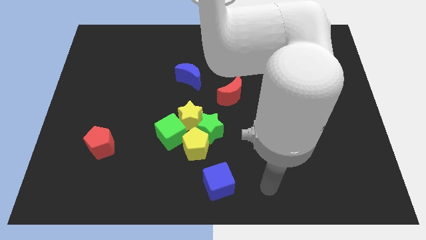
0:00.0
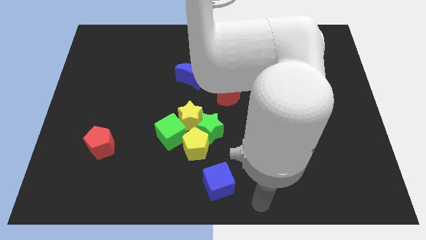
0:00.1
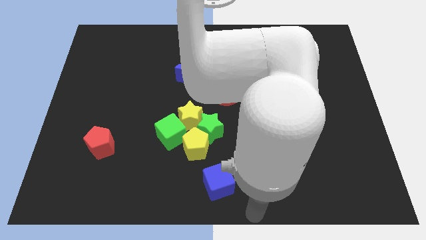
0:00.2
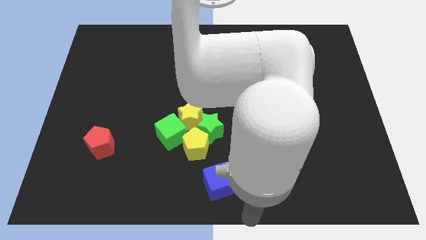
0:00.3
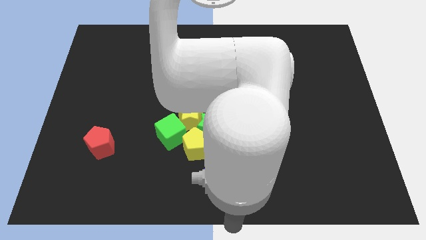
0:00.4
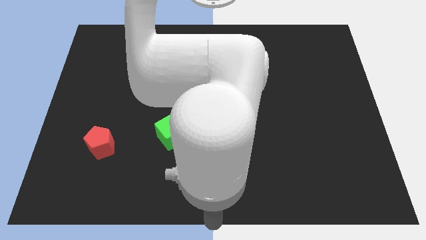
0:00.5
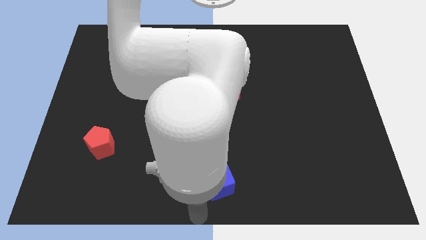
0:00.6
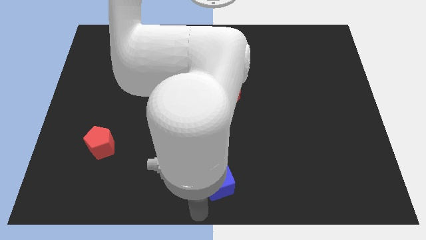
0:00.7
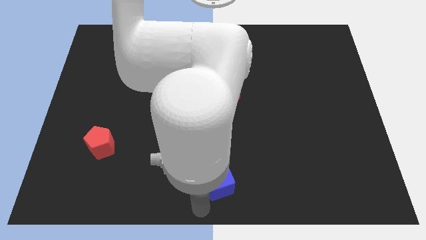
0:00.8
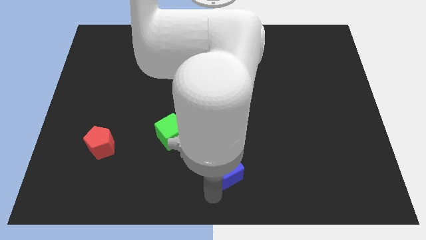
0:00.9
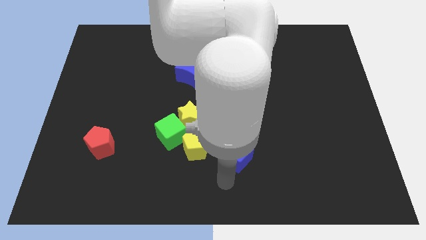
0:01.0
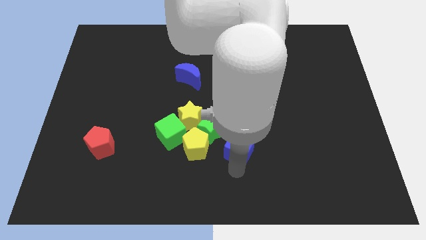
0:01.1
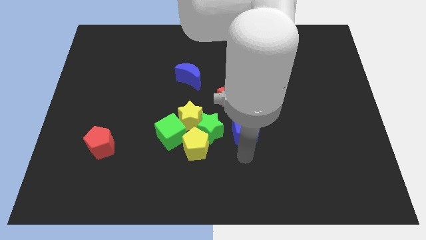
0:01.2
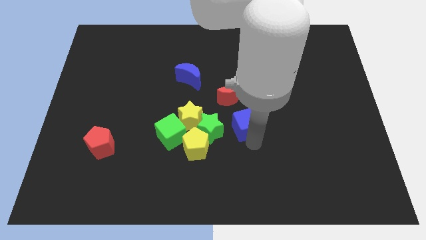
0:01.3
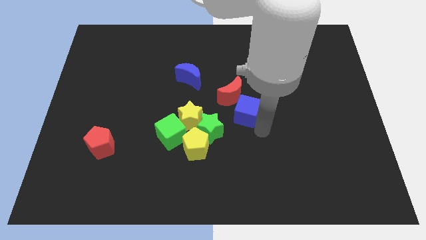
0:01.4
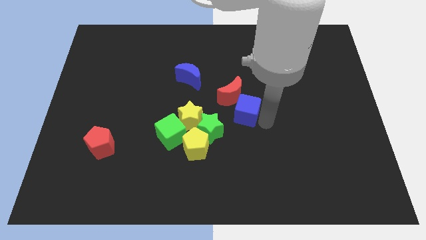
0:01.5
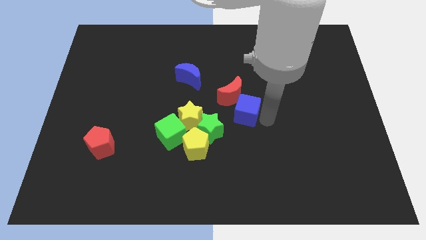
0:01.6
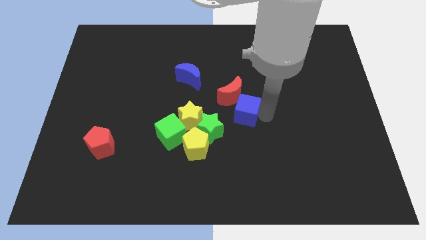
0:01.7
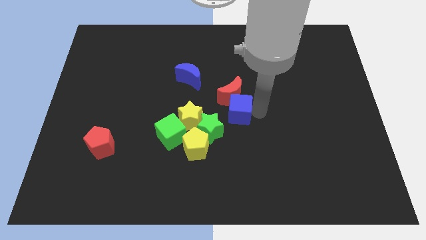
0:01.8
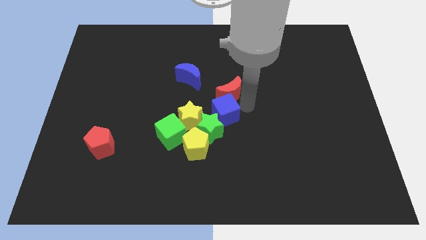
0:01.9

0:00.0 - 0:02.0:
move blue cube in between red moon and green star

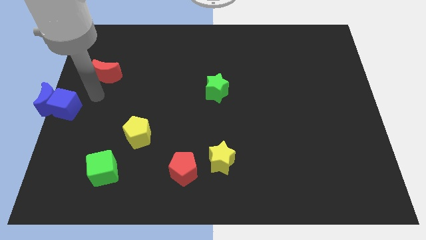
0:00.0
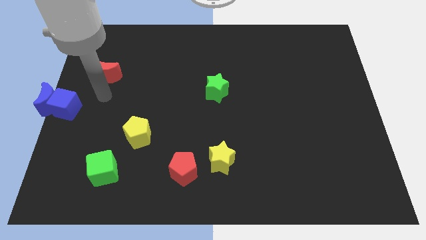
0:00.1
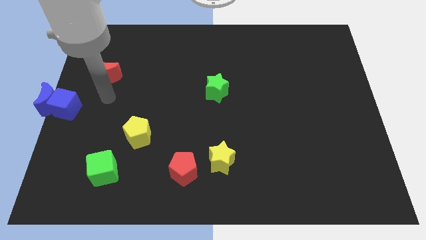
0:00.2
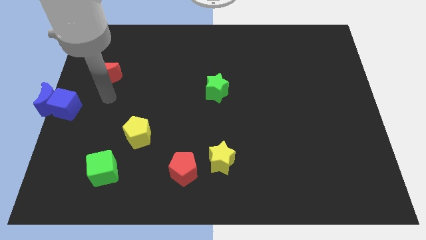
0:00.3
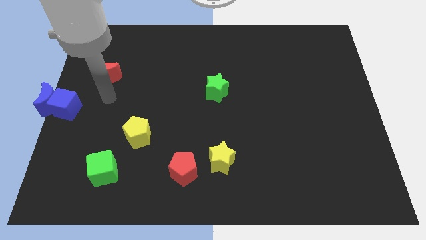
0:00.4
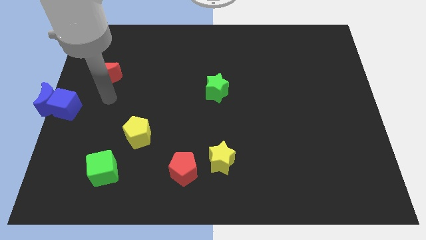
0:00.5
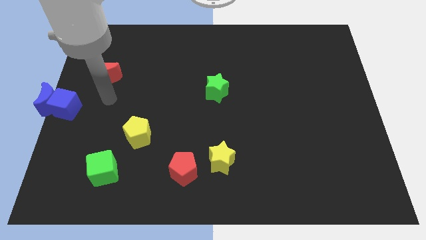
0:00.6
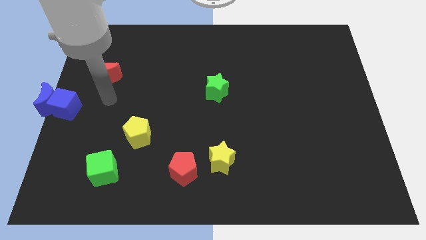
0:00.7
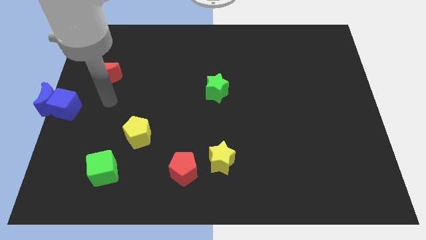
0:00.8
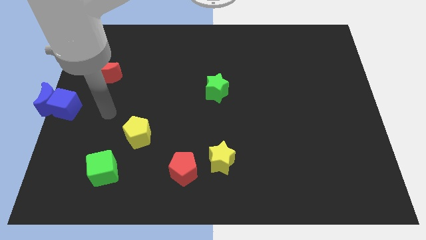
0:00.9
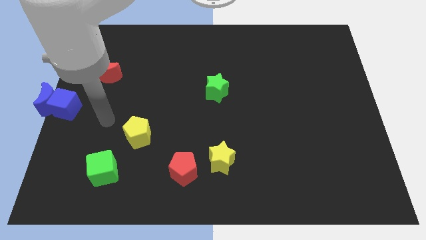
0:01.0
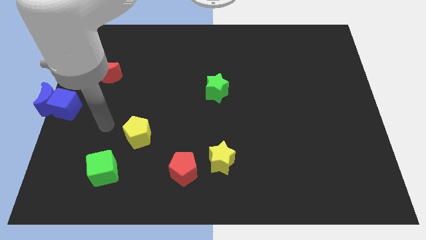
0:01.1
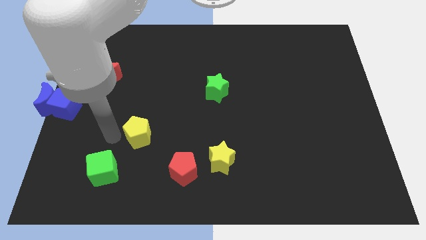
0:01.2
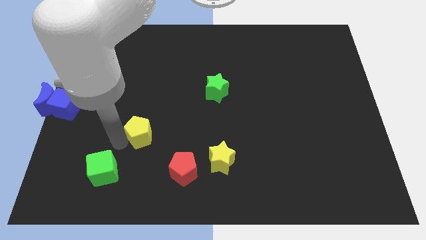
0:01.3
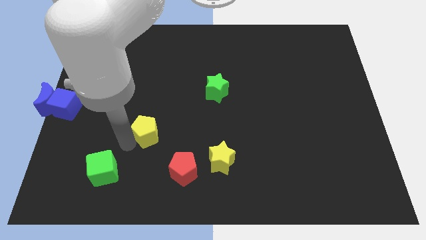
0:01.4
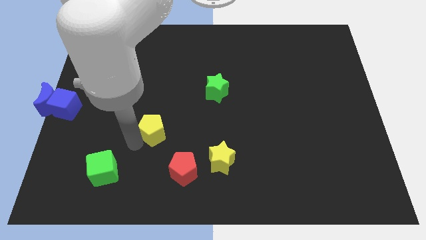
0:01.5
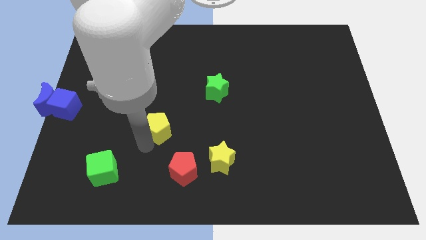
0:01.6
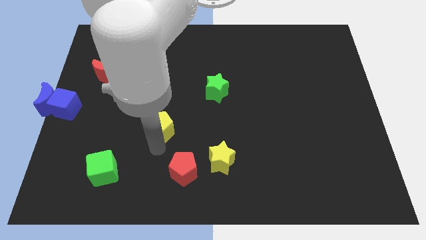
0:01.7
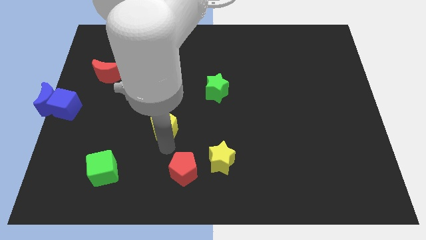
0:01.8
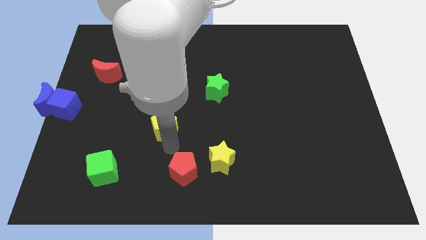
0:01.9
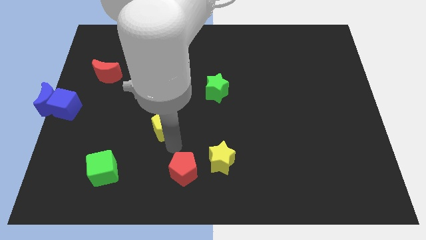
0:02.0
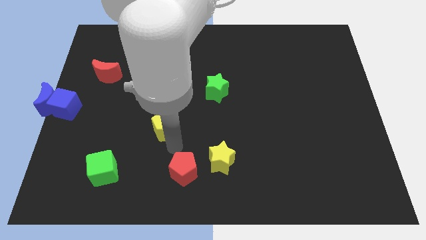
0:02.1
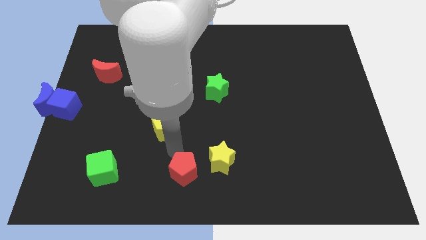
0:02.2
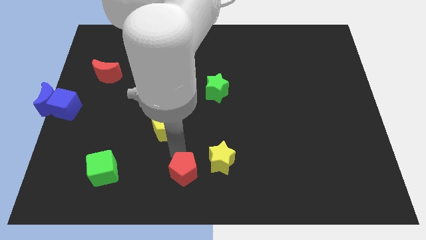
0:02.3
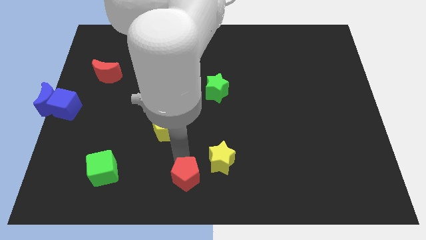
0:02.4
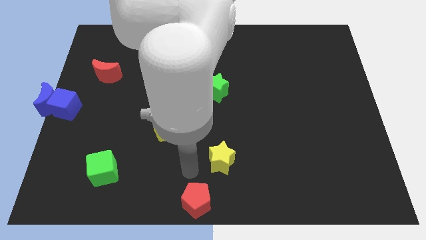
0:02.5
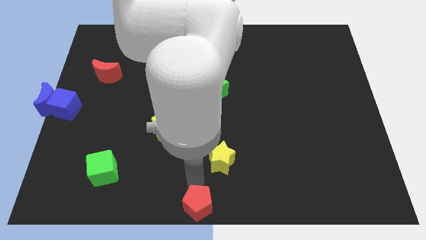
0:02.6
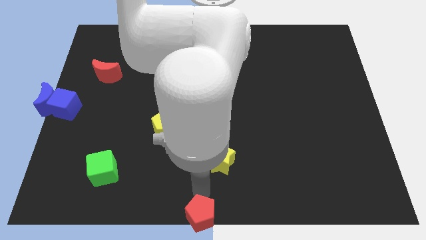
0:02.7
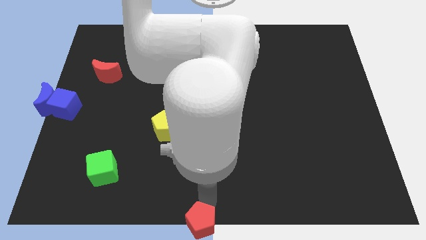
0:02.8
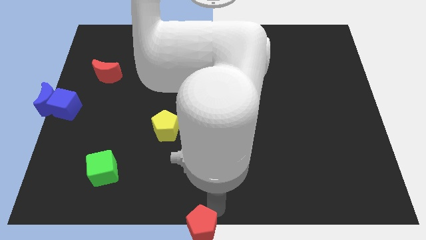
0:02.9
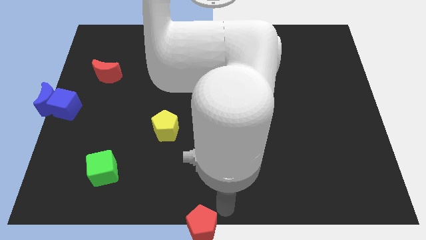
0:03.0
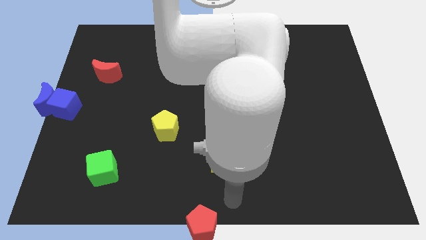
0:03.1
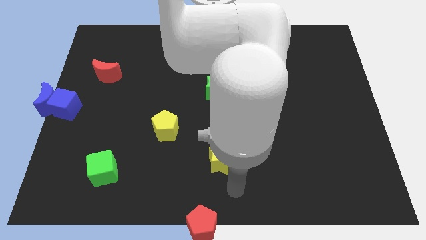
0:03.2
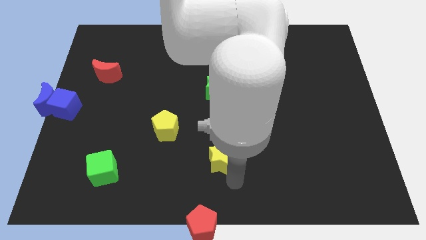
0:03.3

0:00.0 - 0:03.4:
push the red pentagon to the bottom

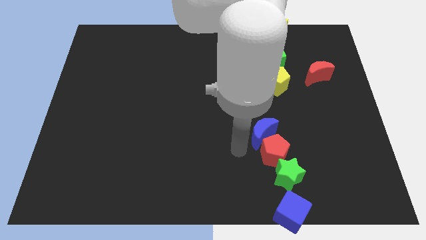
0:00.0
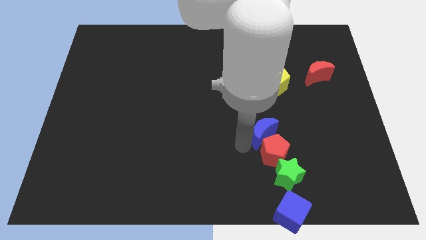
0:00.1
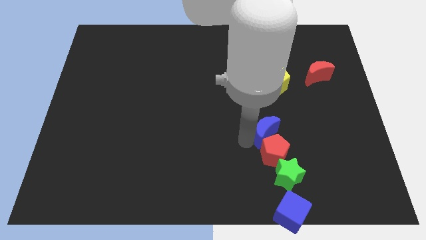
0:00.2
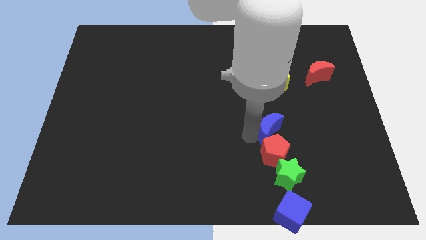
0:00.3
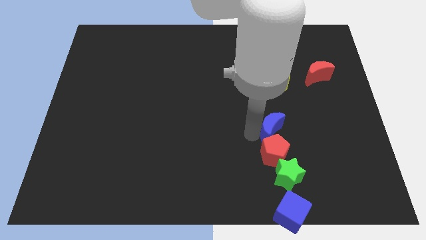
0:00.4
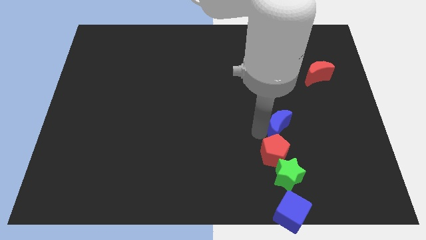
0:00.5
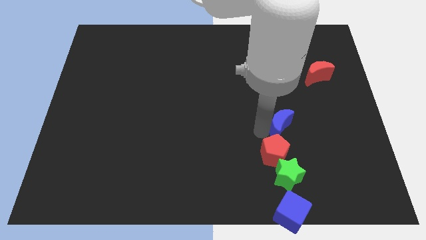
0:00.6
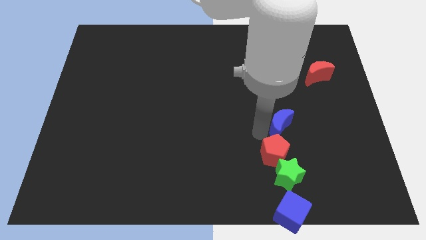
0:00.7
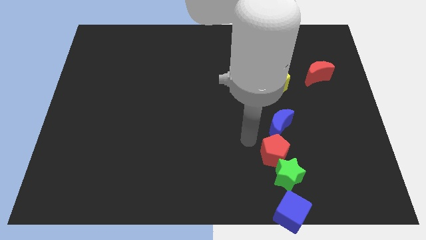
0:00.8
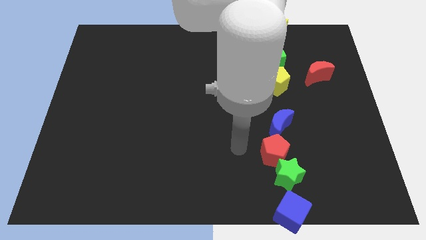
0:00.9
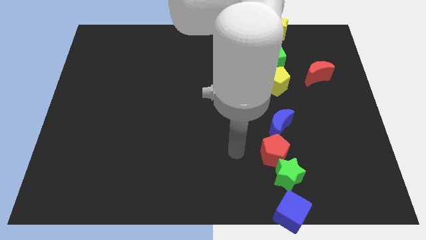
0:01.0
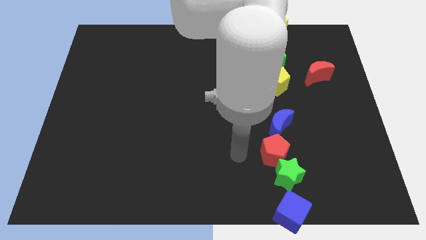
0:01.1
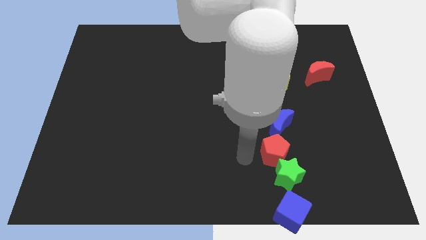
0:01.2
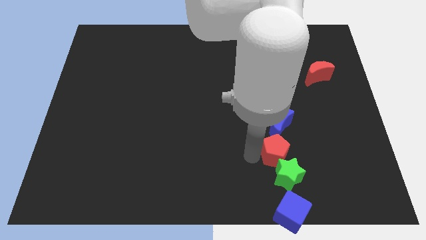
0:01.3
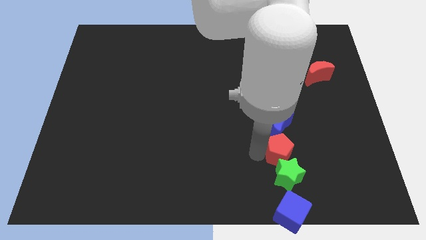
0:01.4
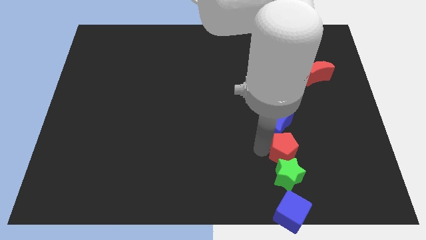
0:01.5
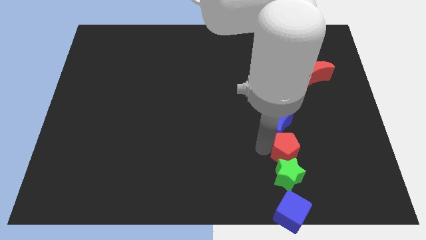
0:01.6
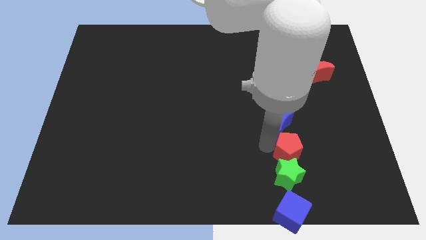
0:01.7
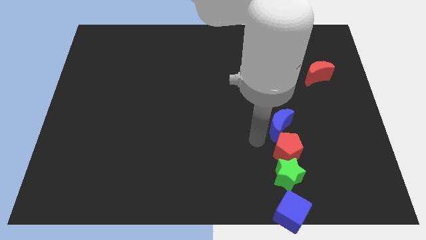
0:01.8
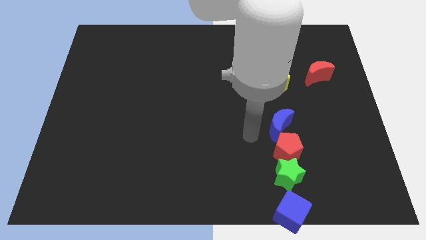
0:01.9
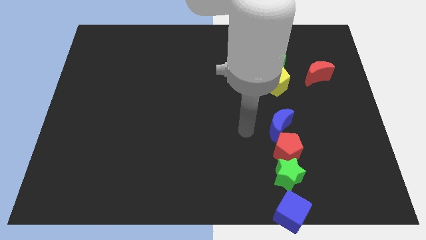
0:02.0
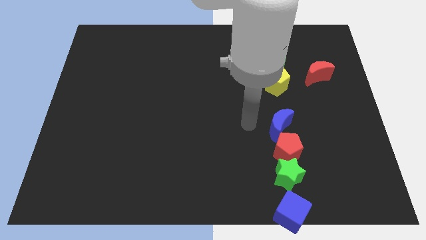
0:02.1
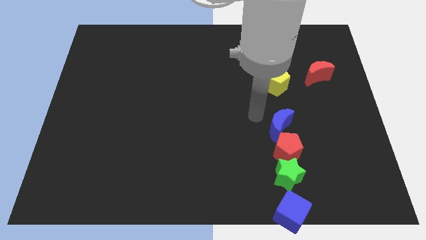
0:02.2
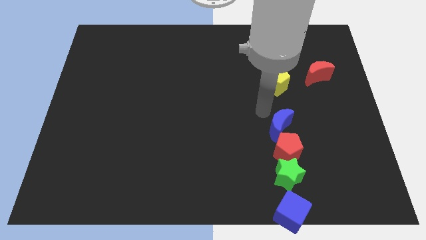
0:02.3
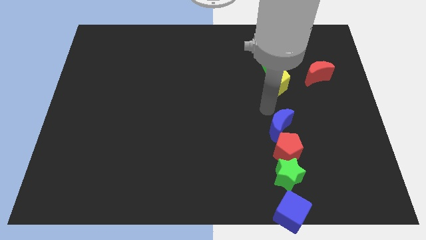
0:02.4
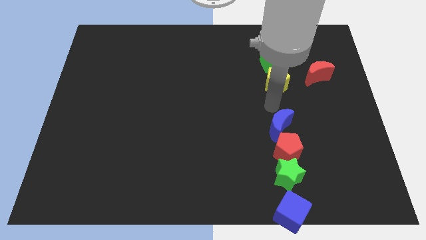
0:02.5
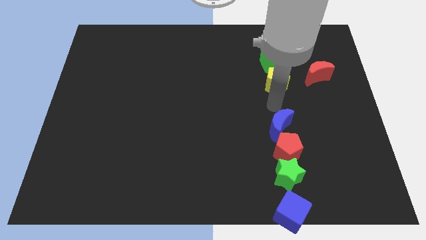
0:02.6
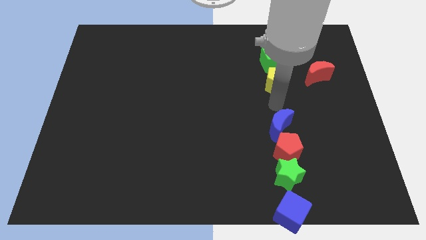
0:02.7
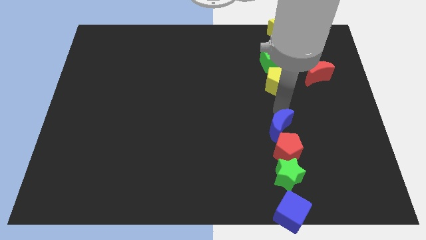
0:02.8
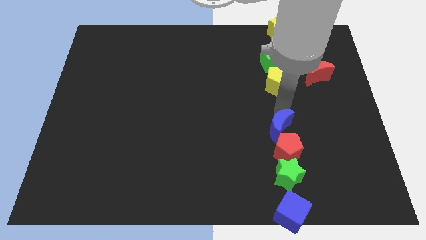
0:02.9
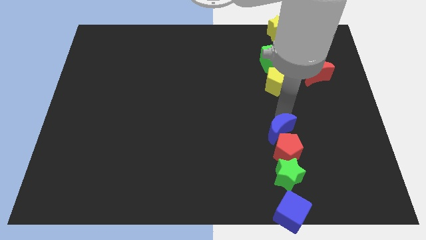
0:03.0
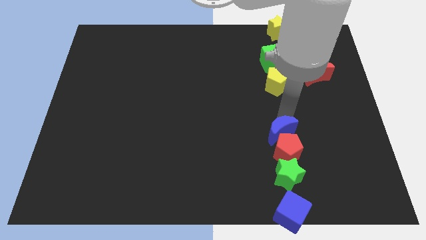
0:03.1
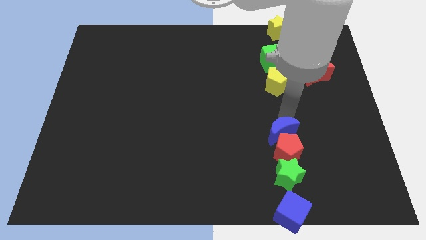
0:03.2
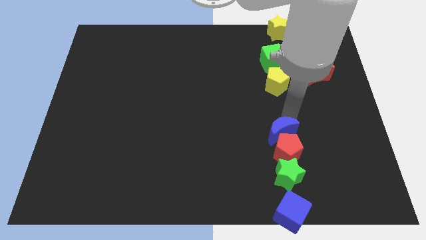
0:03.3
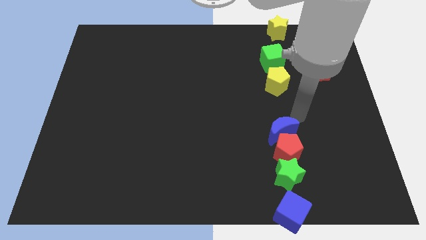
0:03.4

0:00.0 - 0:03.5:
push the red pentagon and blue moon at the top side of the green star

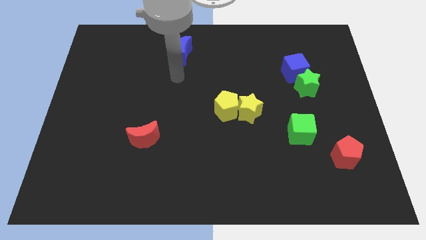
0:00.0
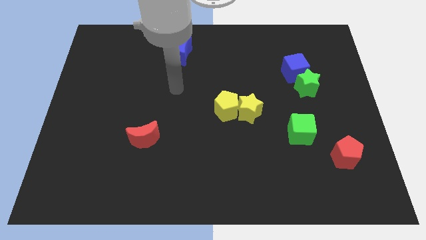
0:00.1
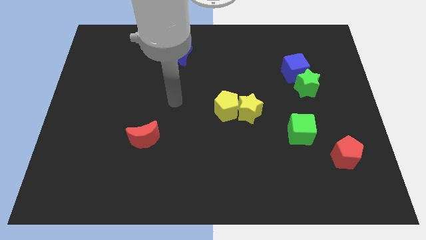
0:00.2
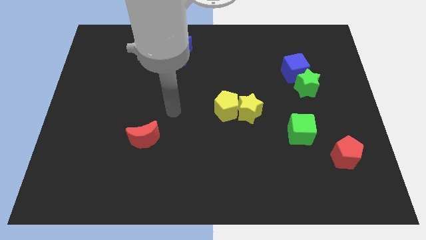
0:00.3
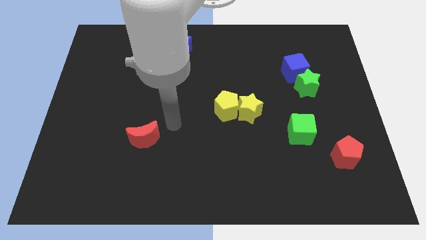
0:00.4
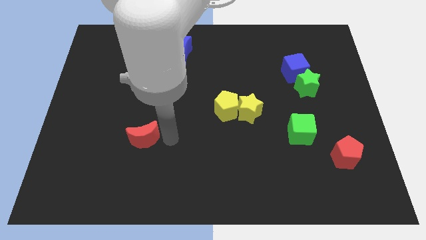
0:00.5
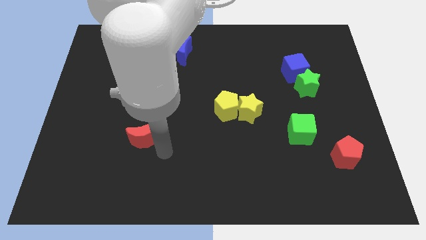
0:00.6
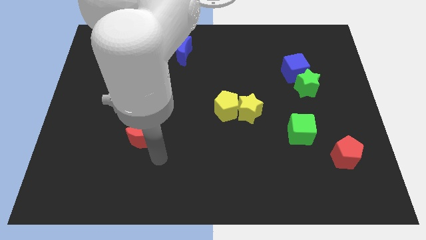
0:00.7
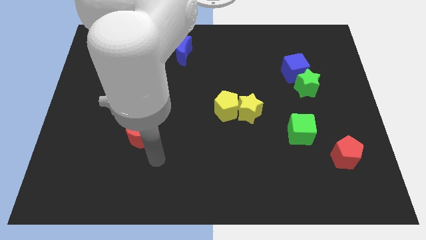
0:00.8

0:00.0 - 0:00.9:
move your arm away from blue crescent
